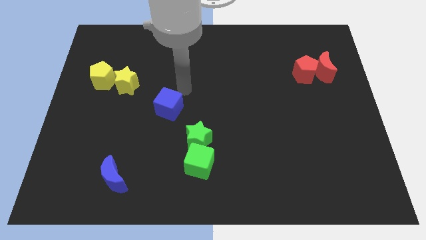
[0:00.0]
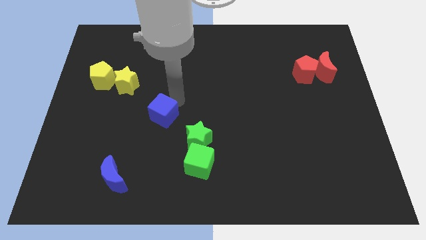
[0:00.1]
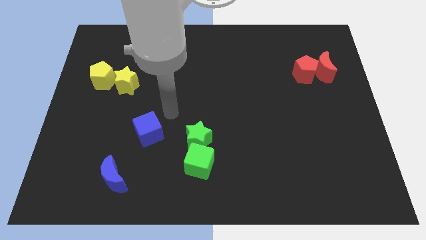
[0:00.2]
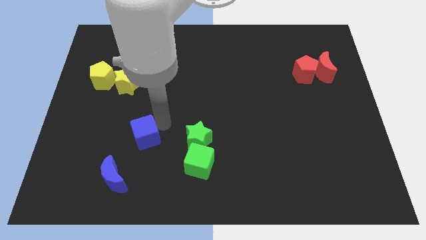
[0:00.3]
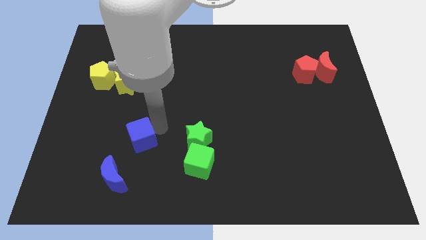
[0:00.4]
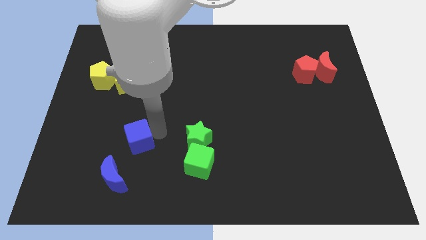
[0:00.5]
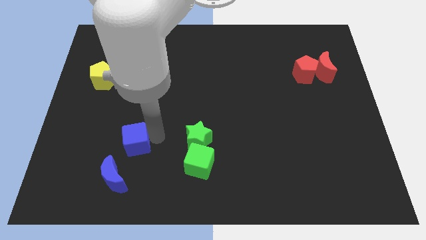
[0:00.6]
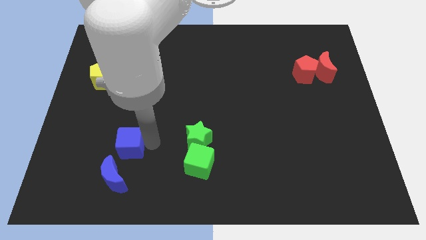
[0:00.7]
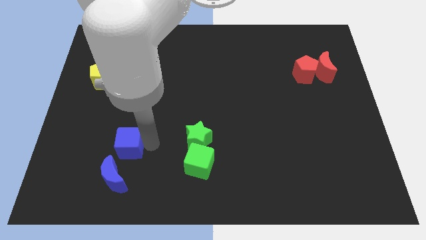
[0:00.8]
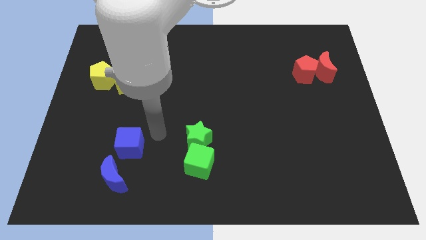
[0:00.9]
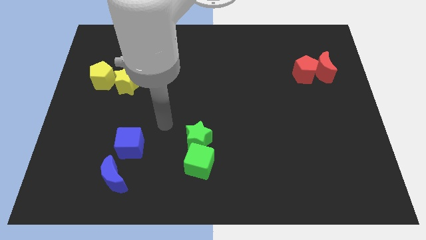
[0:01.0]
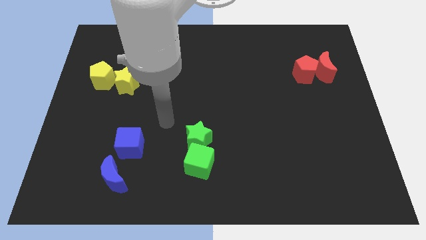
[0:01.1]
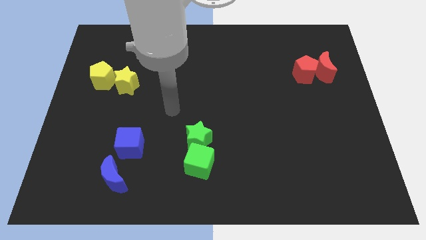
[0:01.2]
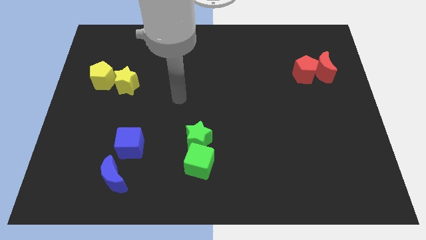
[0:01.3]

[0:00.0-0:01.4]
move blue cube near blue moon

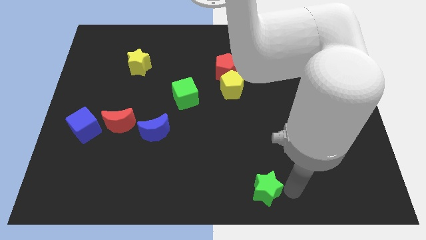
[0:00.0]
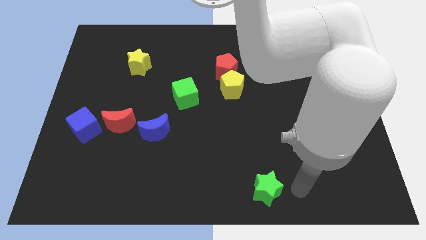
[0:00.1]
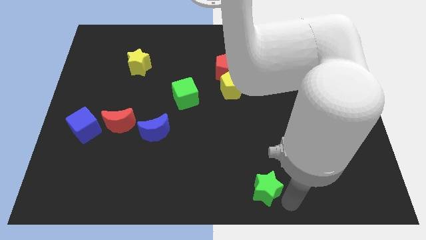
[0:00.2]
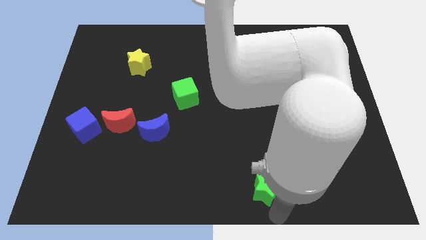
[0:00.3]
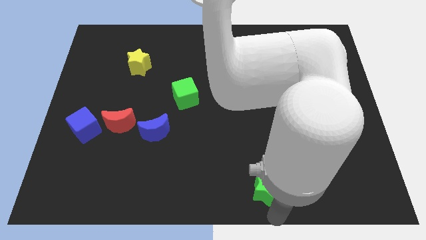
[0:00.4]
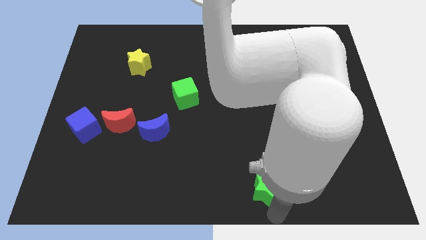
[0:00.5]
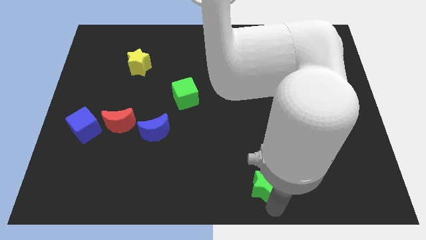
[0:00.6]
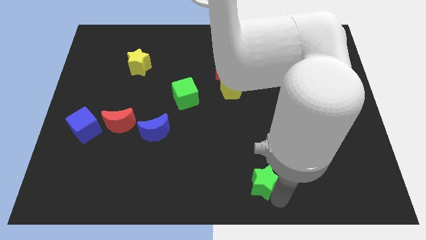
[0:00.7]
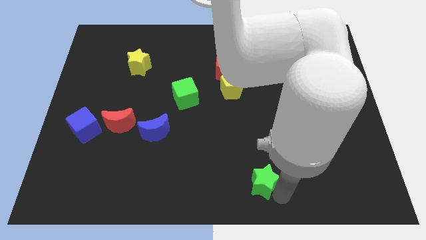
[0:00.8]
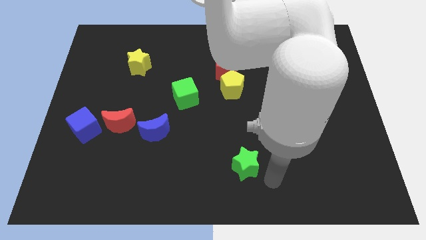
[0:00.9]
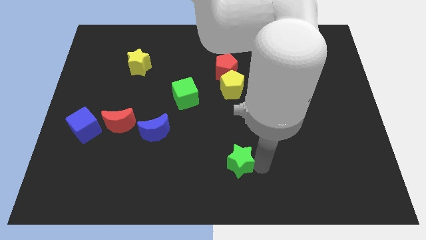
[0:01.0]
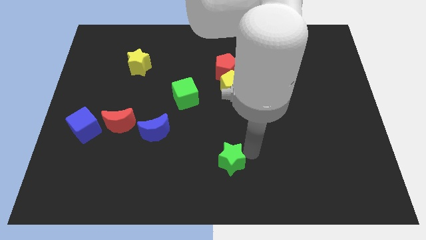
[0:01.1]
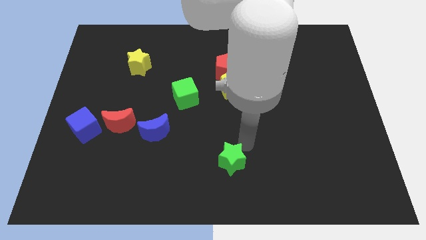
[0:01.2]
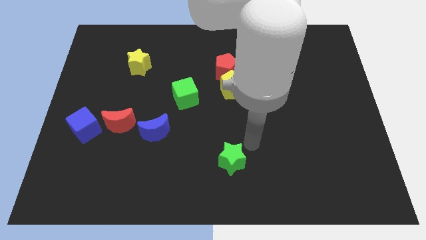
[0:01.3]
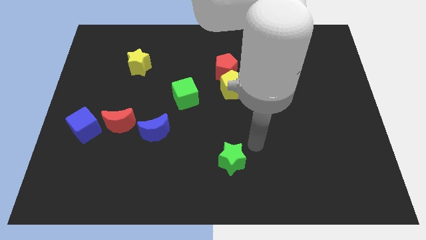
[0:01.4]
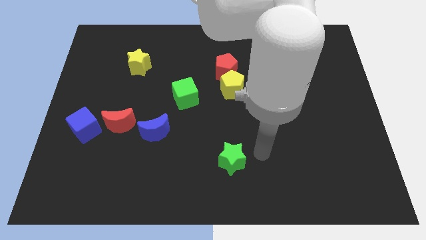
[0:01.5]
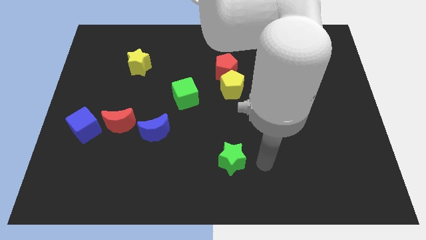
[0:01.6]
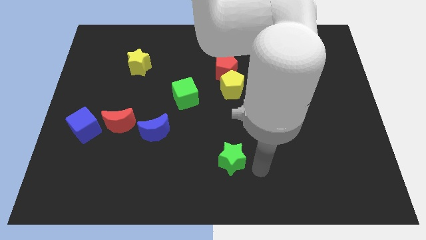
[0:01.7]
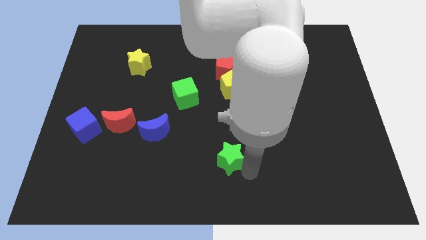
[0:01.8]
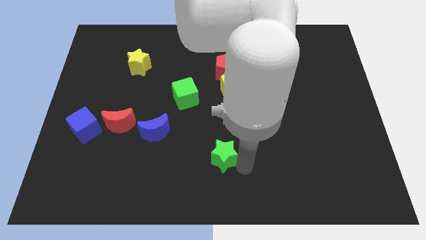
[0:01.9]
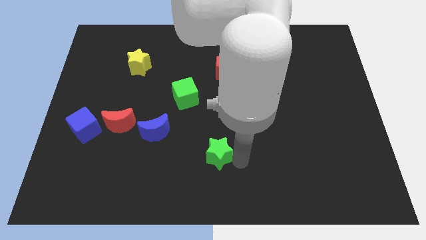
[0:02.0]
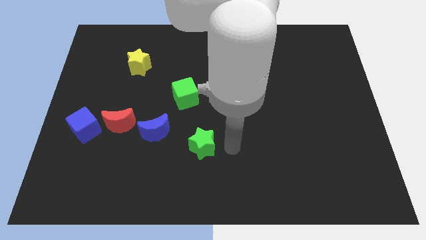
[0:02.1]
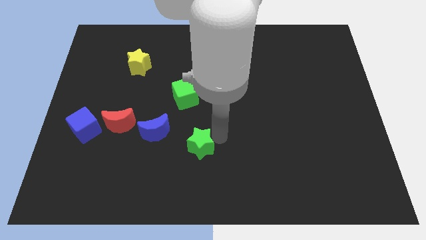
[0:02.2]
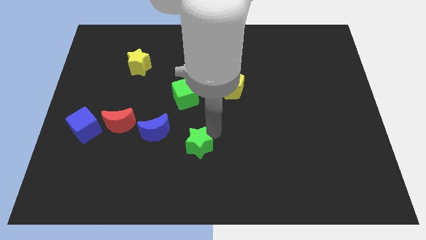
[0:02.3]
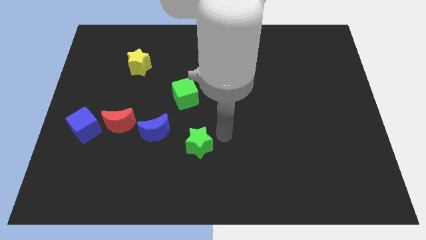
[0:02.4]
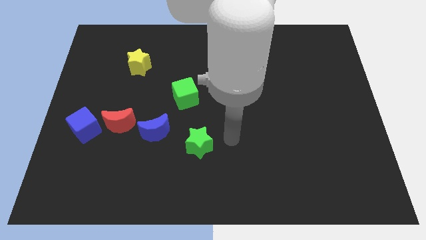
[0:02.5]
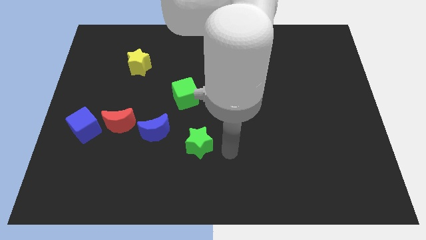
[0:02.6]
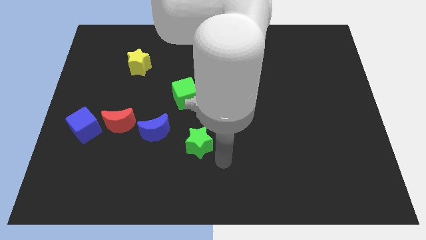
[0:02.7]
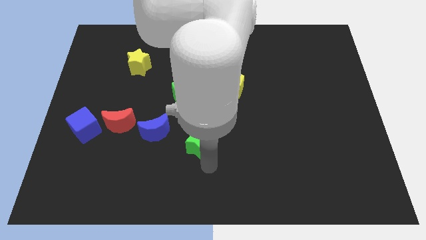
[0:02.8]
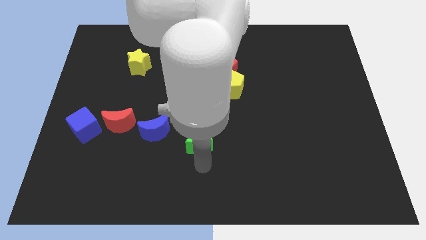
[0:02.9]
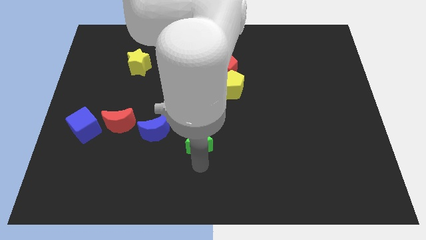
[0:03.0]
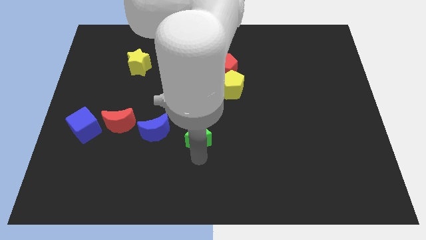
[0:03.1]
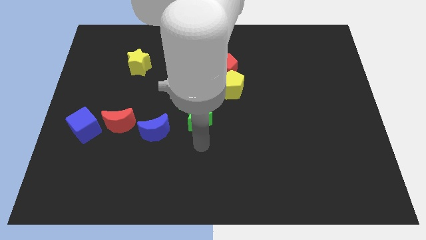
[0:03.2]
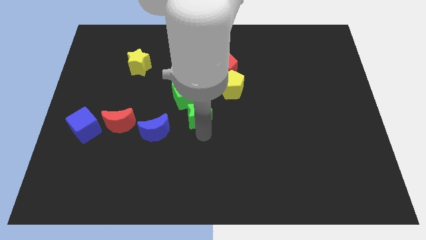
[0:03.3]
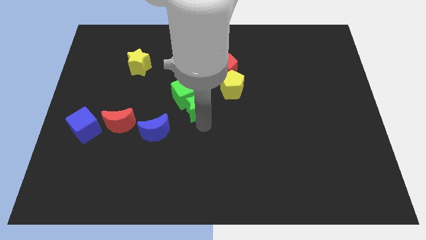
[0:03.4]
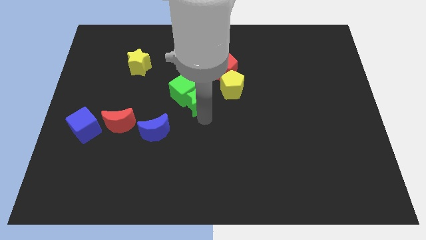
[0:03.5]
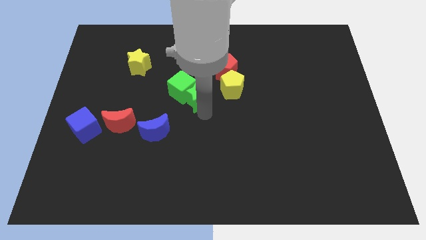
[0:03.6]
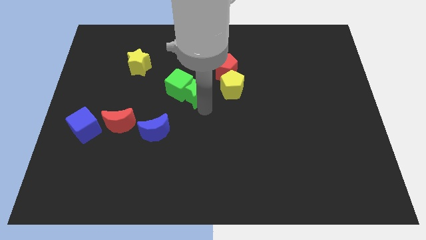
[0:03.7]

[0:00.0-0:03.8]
move the green star into the green cube

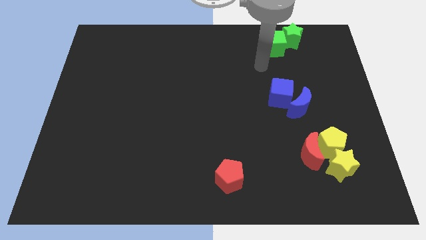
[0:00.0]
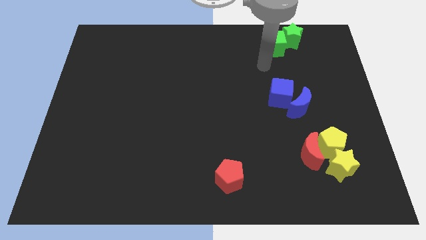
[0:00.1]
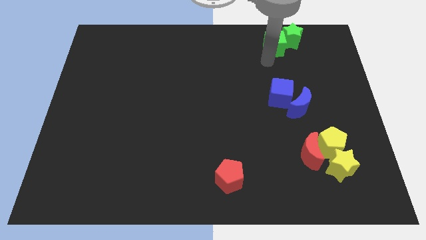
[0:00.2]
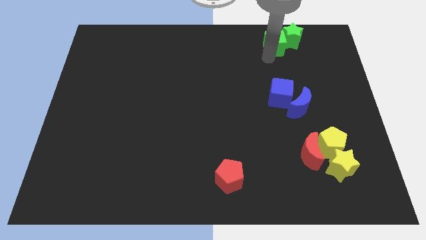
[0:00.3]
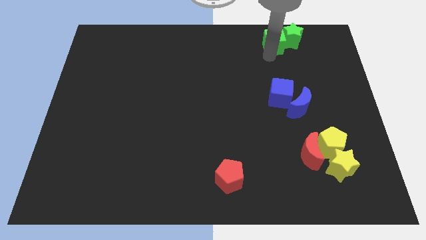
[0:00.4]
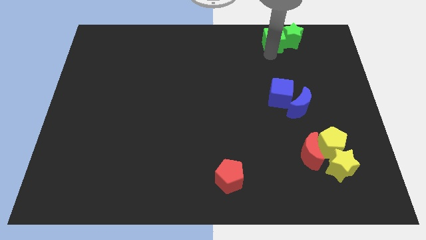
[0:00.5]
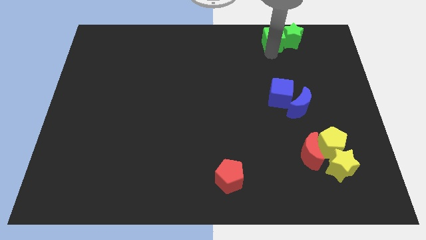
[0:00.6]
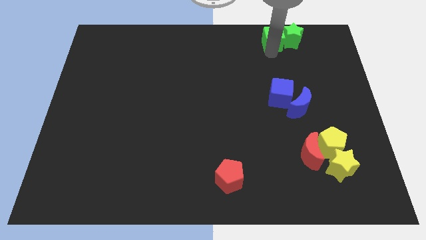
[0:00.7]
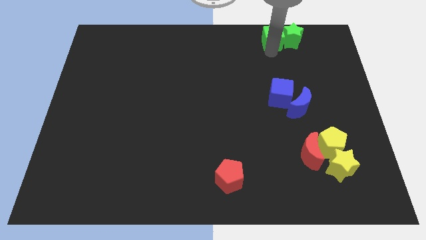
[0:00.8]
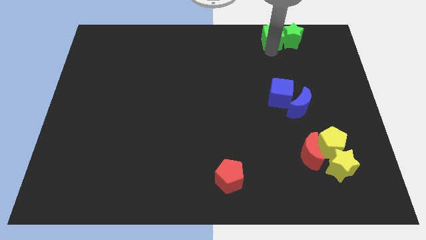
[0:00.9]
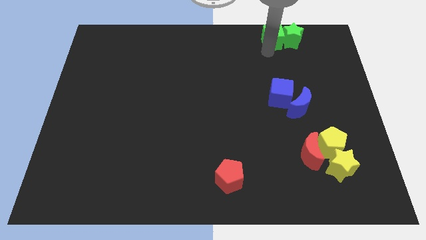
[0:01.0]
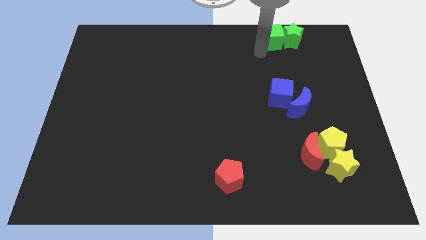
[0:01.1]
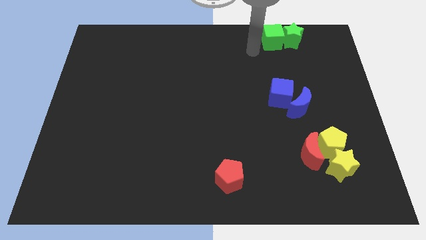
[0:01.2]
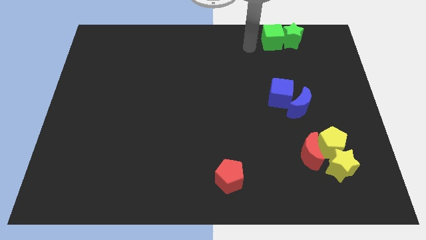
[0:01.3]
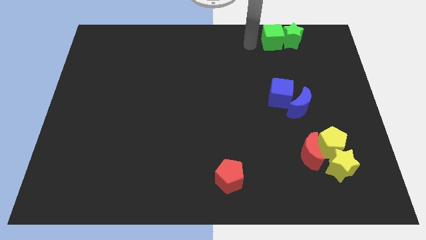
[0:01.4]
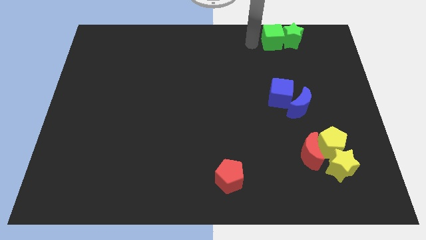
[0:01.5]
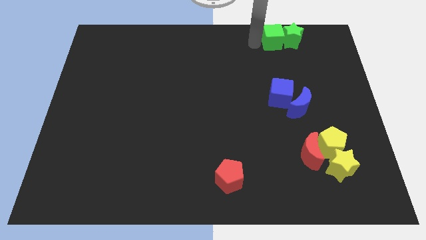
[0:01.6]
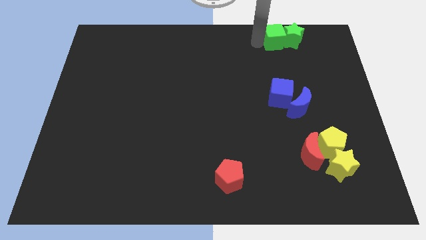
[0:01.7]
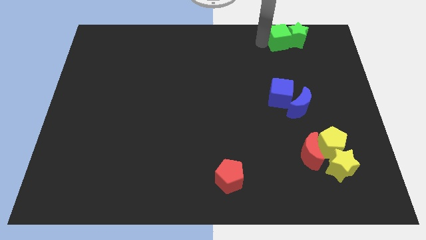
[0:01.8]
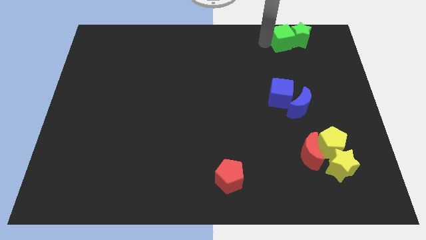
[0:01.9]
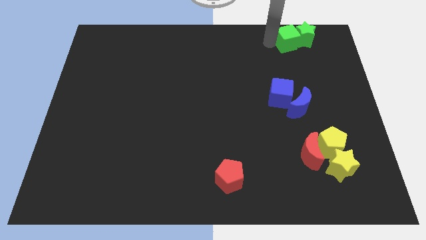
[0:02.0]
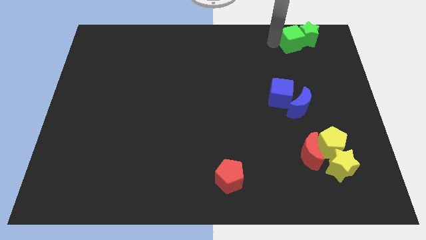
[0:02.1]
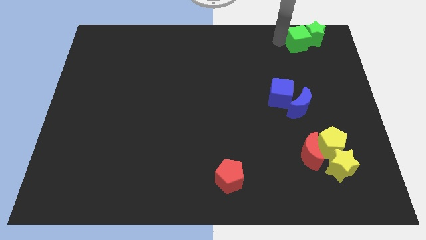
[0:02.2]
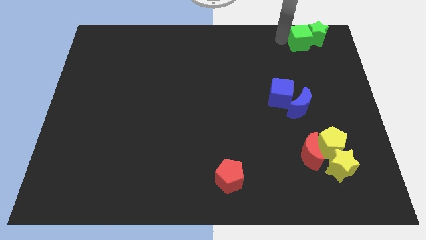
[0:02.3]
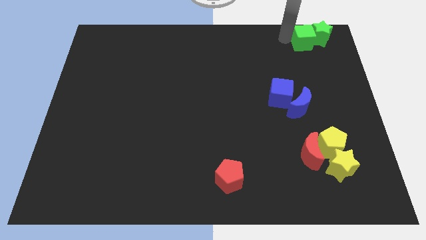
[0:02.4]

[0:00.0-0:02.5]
push the green cube along with the green star slightly to the right

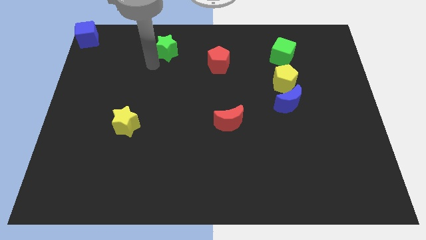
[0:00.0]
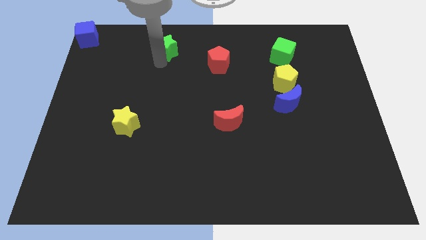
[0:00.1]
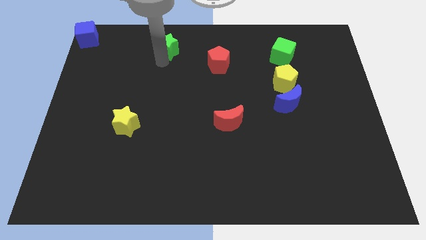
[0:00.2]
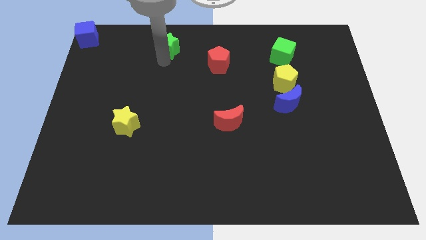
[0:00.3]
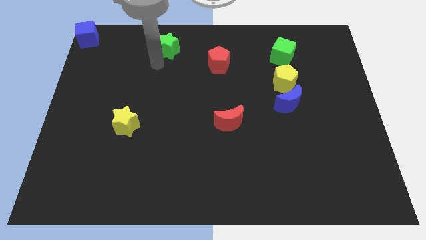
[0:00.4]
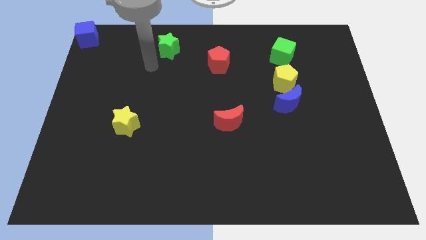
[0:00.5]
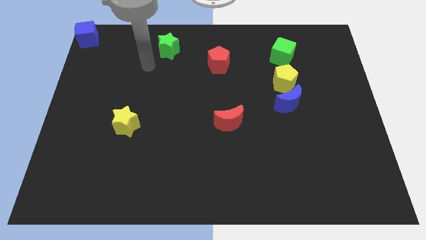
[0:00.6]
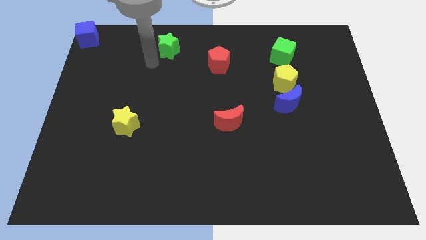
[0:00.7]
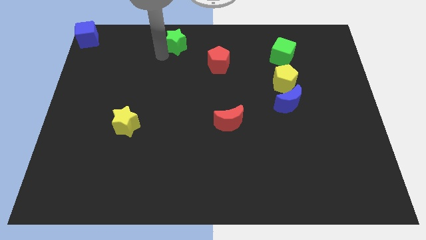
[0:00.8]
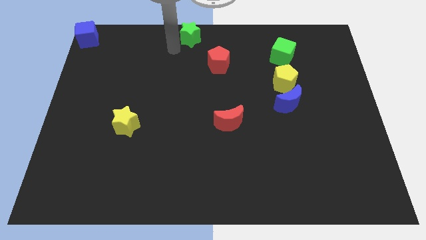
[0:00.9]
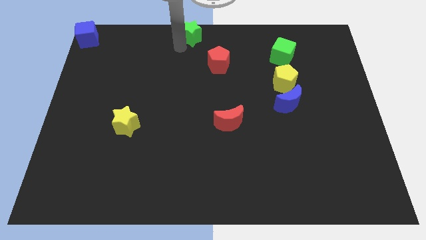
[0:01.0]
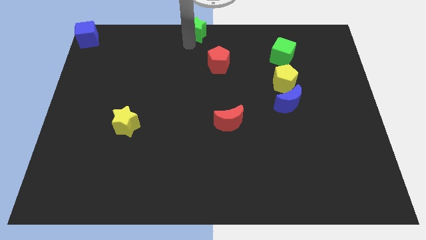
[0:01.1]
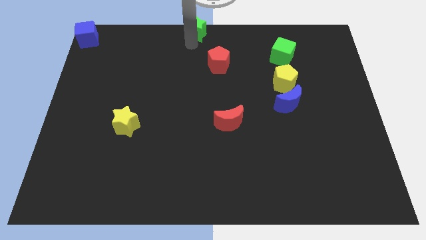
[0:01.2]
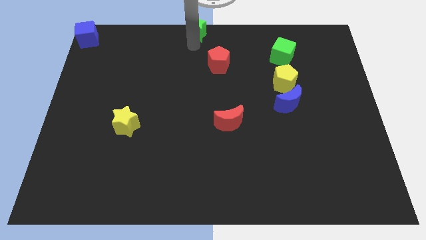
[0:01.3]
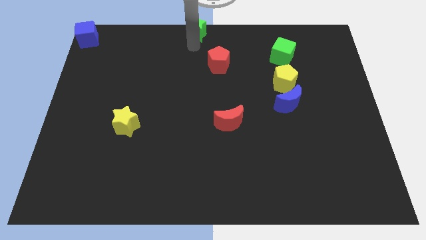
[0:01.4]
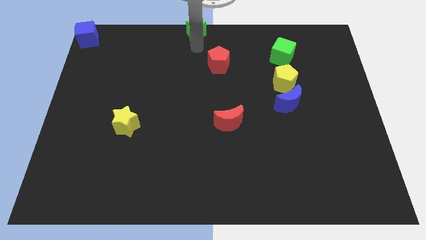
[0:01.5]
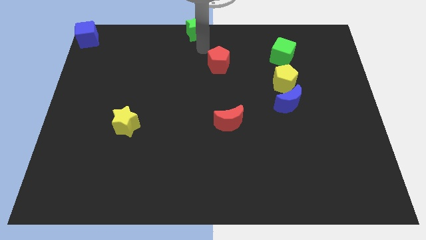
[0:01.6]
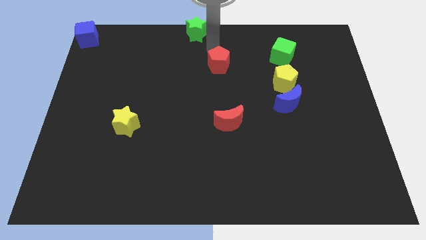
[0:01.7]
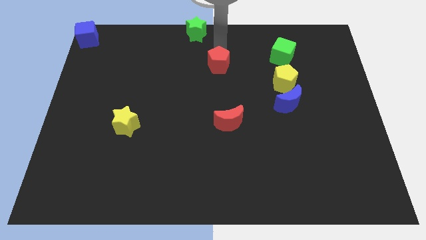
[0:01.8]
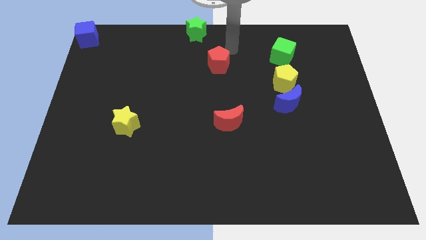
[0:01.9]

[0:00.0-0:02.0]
move the green star diagonally on the top left side of the red pentagon
